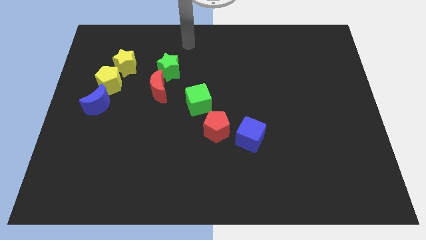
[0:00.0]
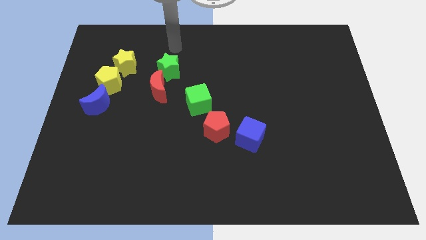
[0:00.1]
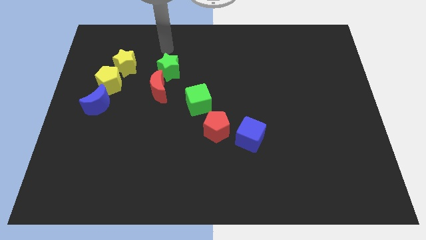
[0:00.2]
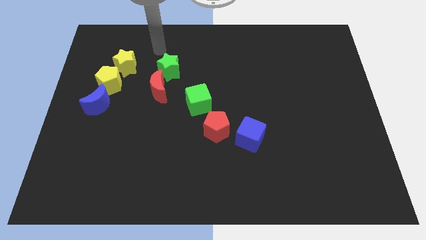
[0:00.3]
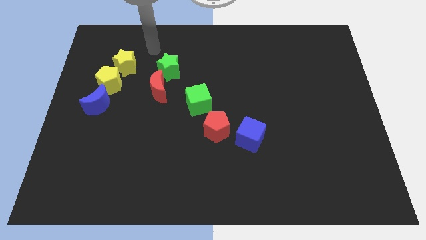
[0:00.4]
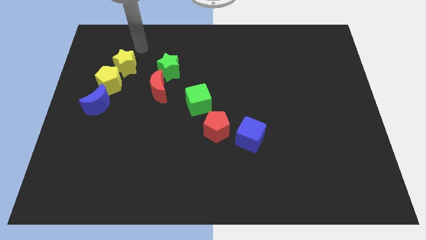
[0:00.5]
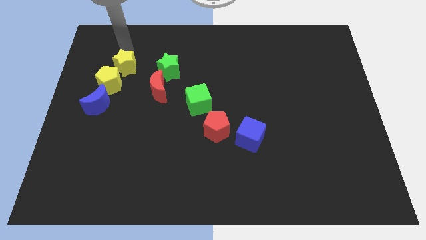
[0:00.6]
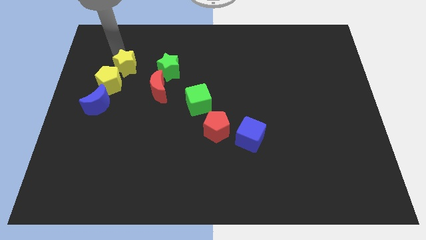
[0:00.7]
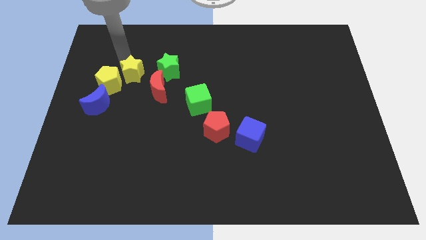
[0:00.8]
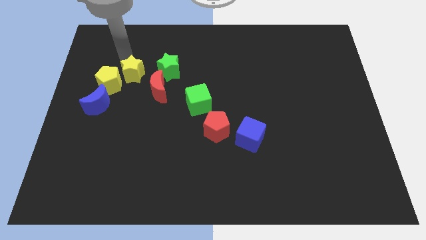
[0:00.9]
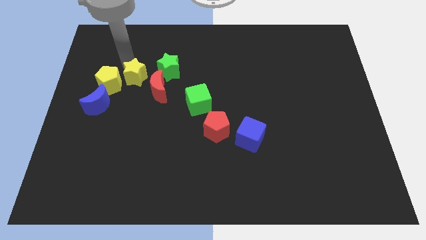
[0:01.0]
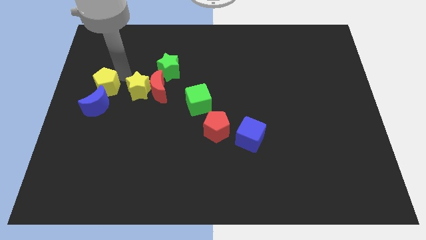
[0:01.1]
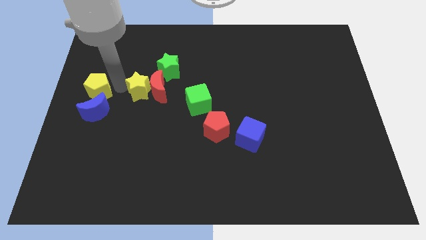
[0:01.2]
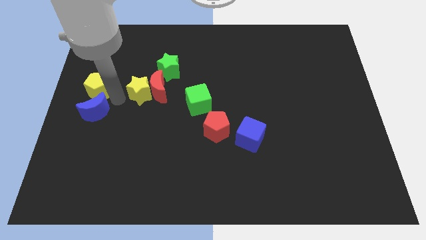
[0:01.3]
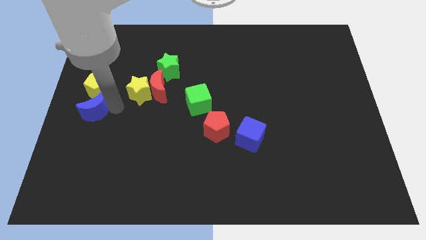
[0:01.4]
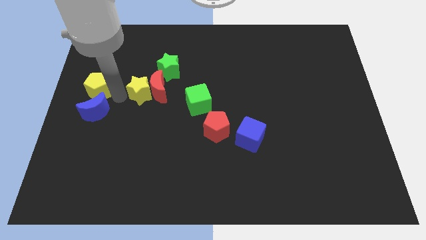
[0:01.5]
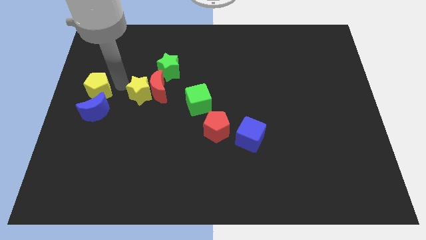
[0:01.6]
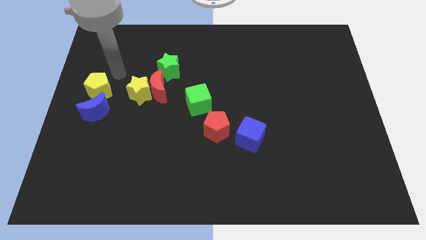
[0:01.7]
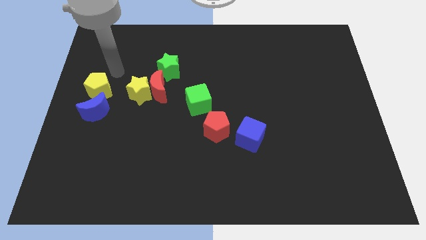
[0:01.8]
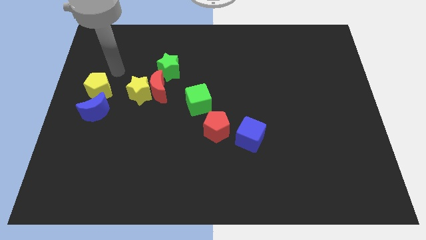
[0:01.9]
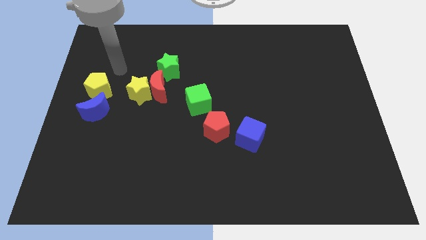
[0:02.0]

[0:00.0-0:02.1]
slightly push yellow star

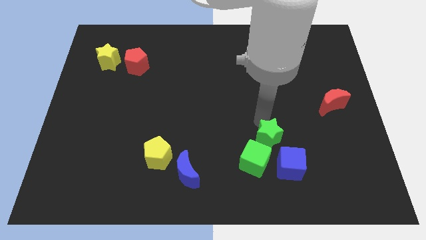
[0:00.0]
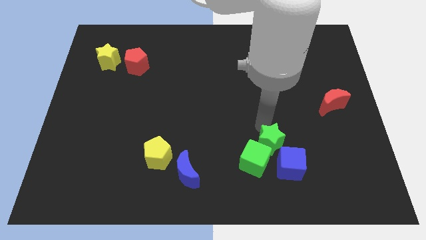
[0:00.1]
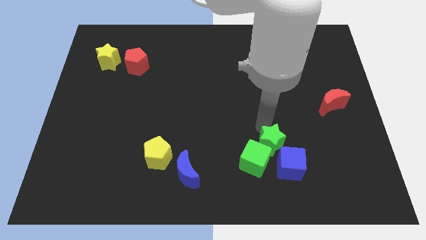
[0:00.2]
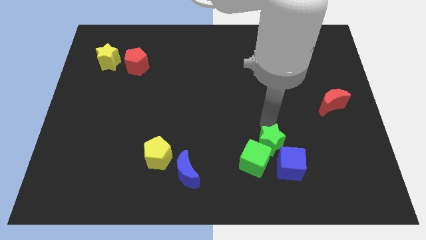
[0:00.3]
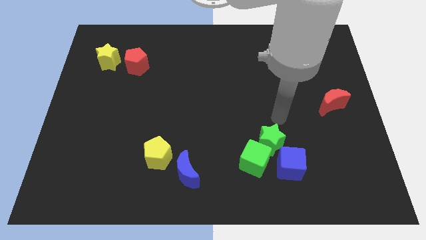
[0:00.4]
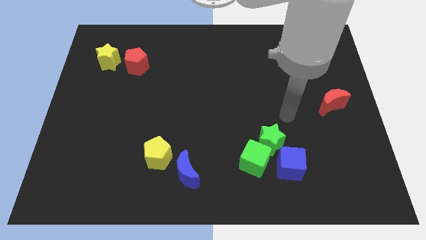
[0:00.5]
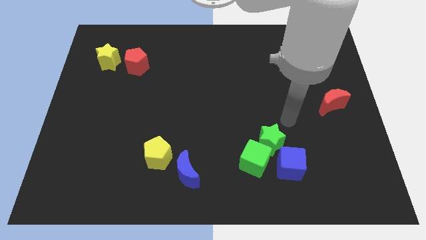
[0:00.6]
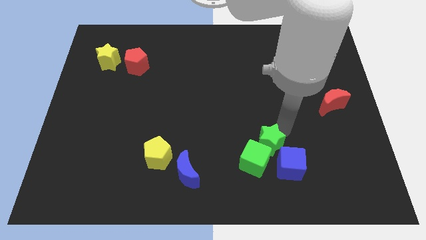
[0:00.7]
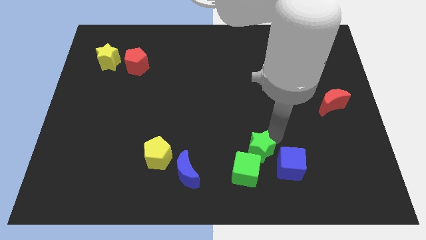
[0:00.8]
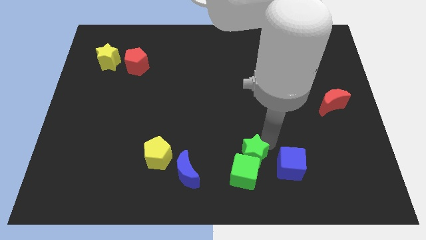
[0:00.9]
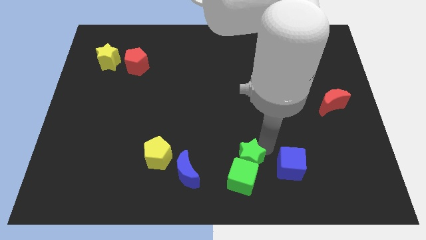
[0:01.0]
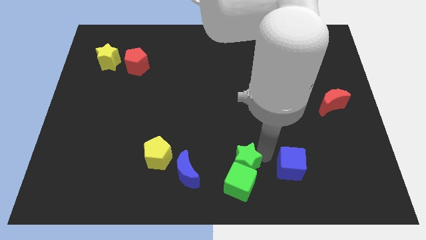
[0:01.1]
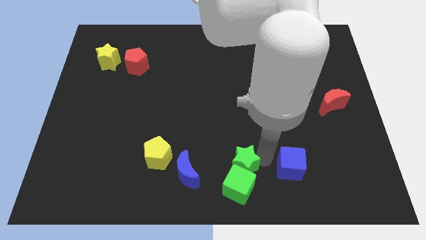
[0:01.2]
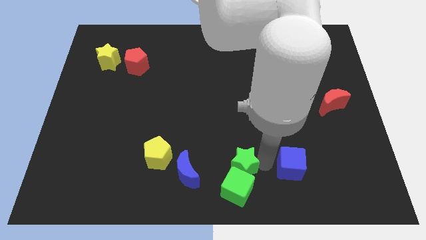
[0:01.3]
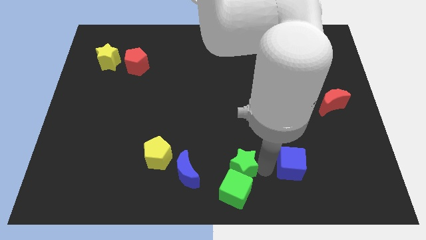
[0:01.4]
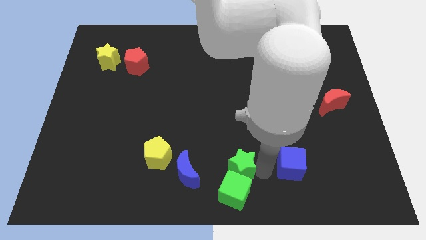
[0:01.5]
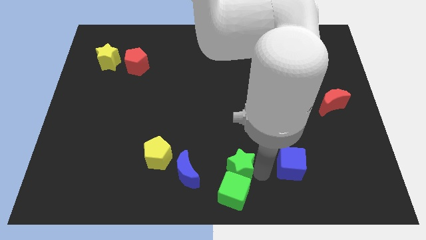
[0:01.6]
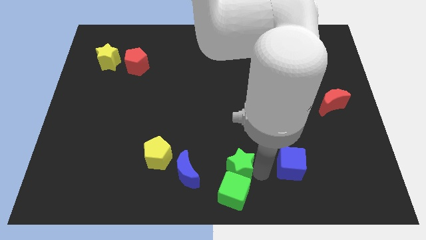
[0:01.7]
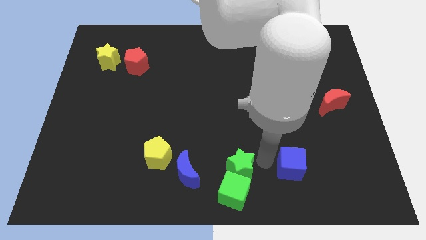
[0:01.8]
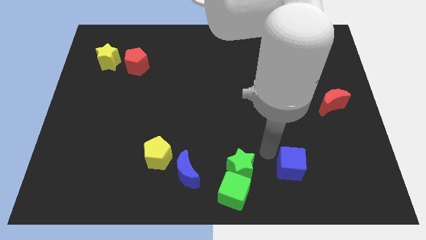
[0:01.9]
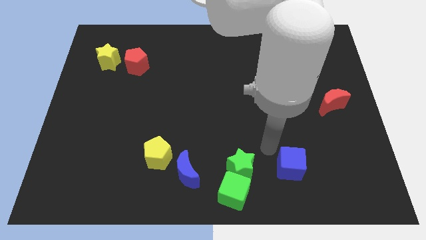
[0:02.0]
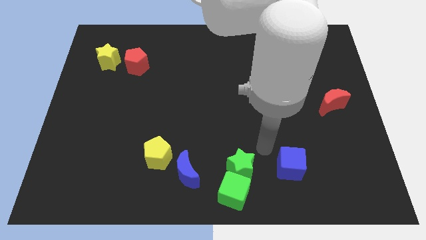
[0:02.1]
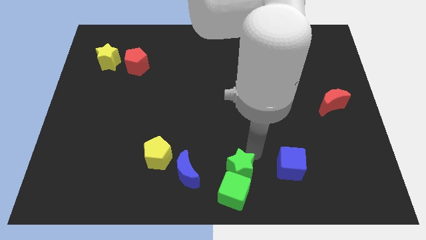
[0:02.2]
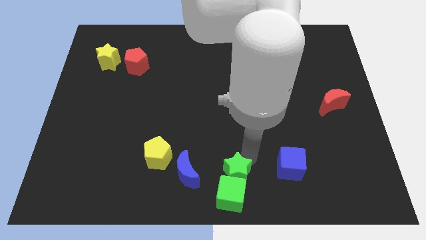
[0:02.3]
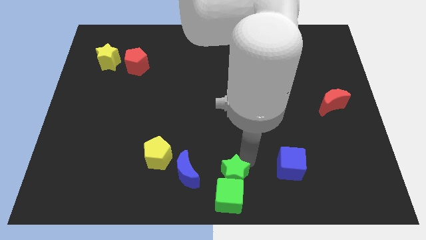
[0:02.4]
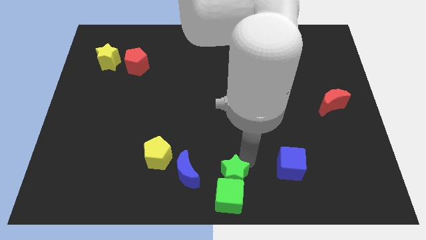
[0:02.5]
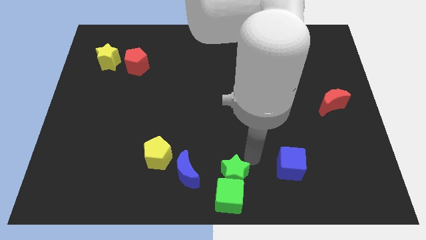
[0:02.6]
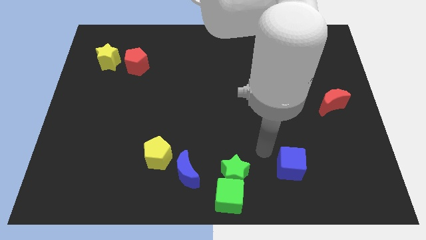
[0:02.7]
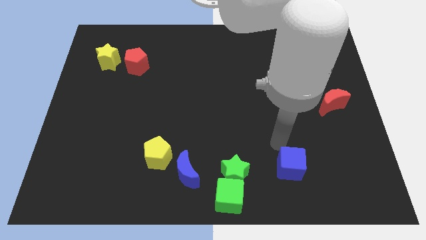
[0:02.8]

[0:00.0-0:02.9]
push the group of green blocks to the bottom center of the board

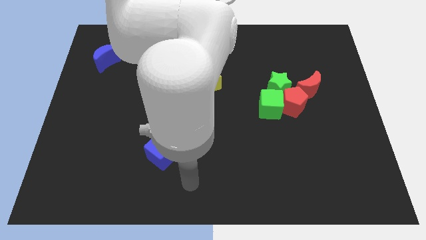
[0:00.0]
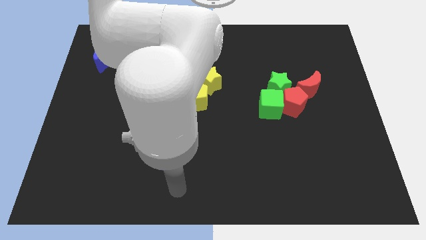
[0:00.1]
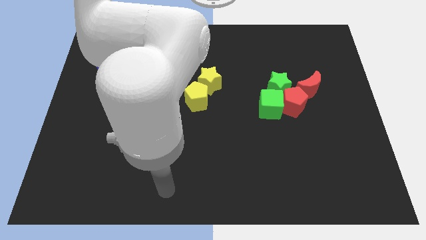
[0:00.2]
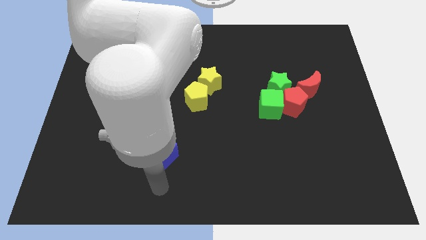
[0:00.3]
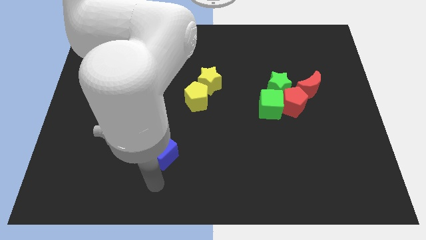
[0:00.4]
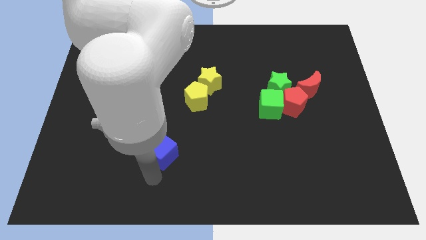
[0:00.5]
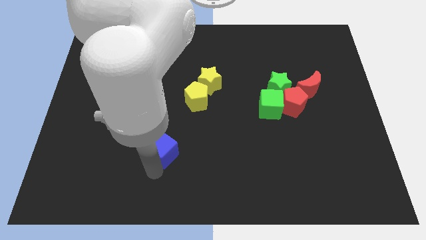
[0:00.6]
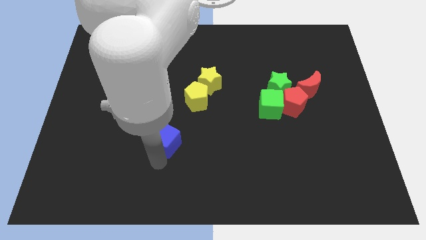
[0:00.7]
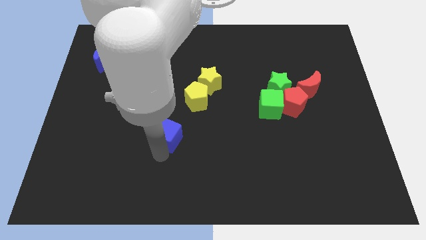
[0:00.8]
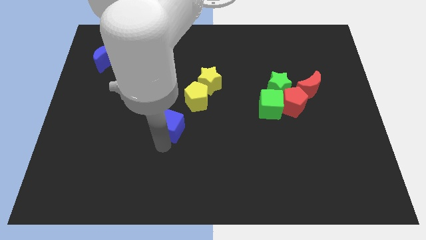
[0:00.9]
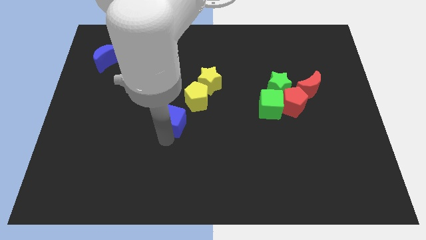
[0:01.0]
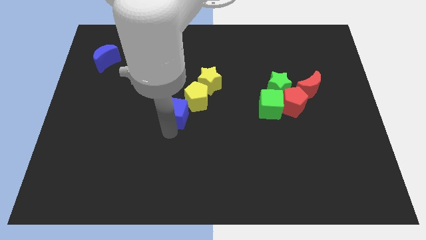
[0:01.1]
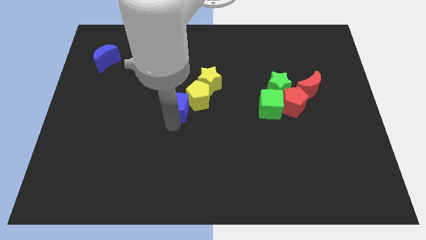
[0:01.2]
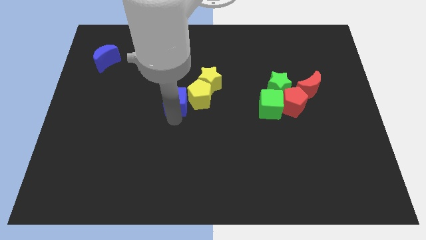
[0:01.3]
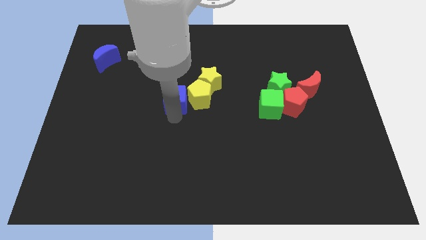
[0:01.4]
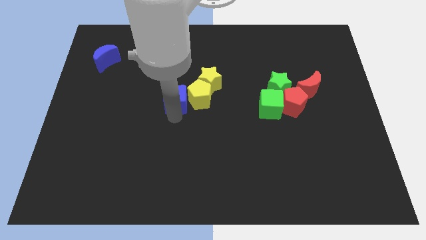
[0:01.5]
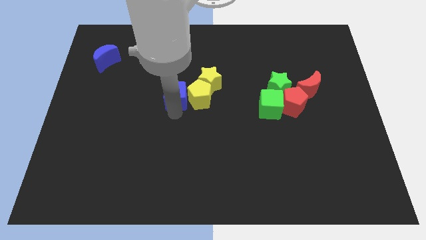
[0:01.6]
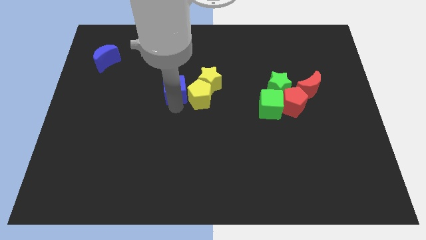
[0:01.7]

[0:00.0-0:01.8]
move the blue cube to the left of the yellow pentagon

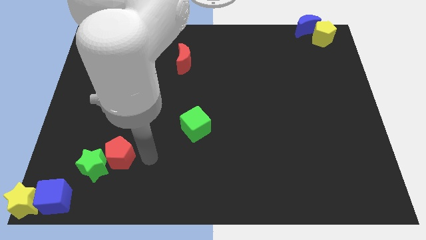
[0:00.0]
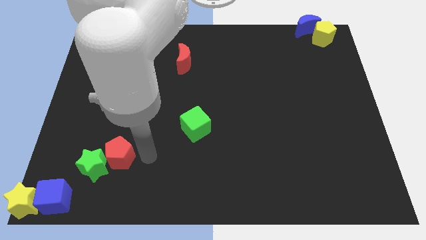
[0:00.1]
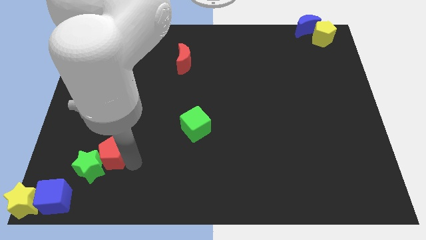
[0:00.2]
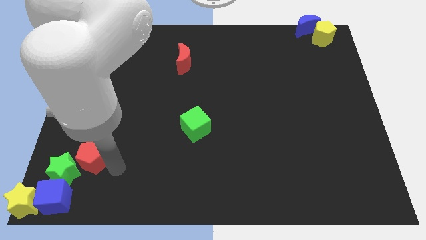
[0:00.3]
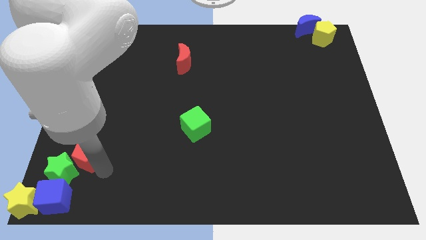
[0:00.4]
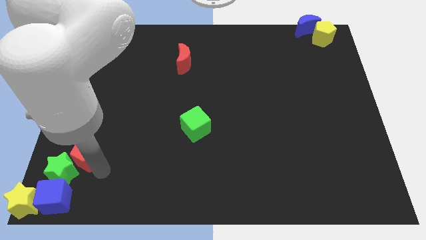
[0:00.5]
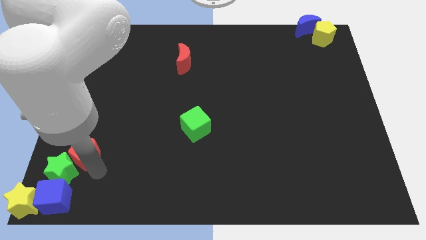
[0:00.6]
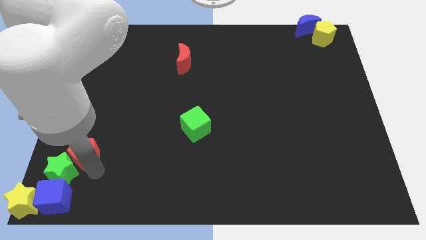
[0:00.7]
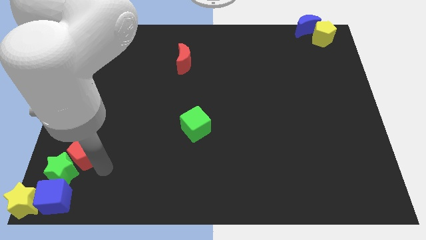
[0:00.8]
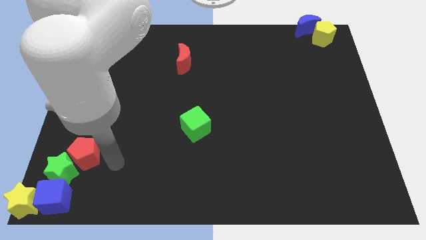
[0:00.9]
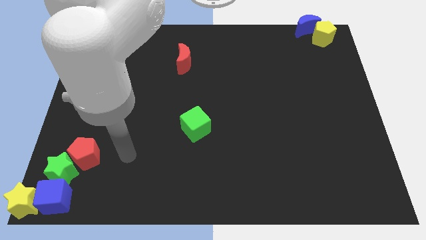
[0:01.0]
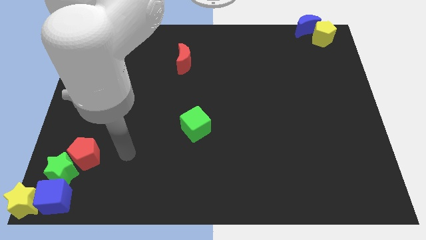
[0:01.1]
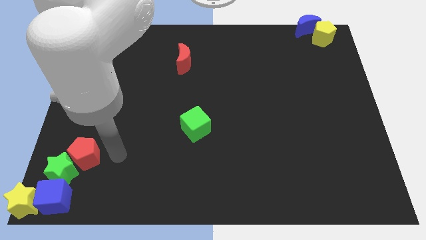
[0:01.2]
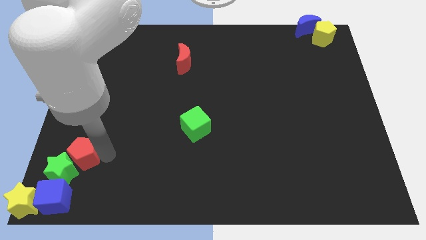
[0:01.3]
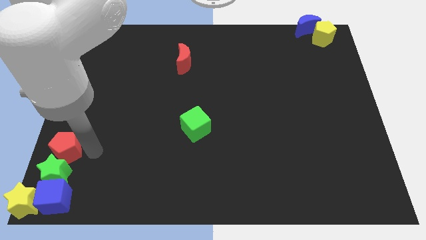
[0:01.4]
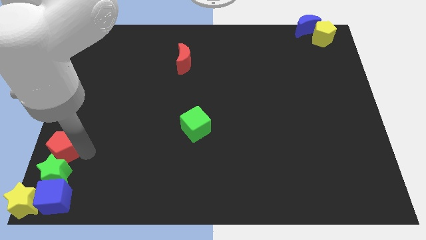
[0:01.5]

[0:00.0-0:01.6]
push the red pentagon and green star above the blue cube

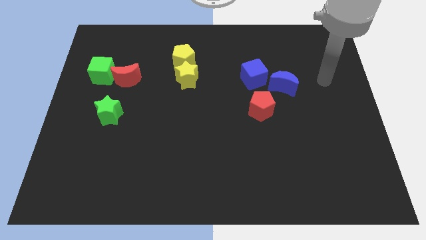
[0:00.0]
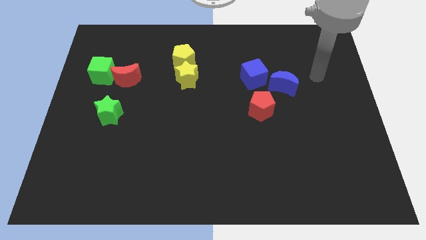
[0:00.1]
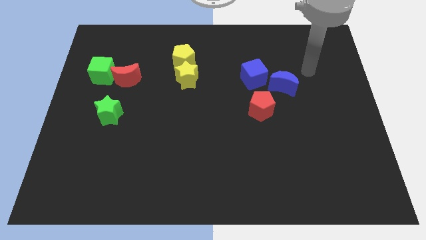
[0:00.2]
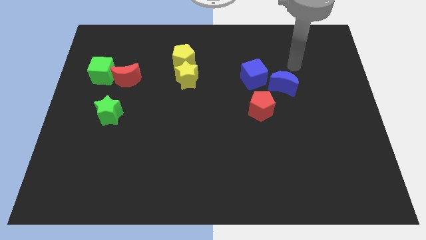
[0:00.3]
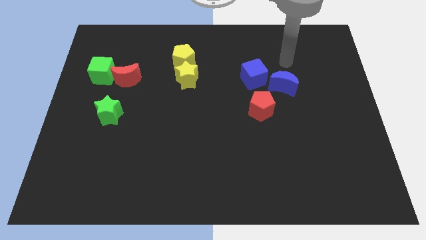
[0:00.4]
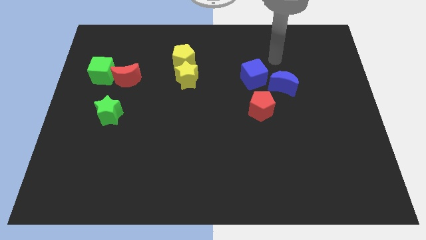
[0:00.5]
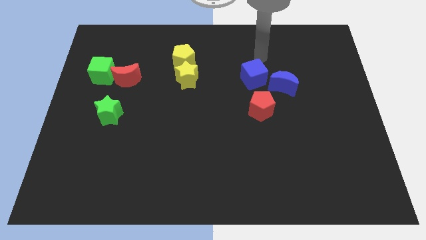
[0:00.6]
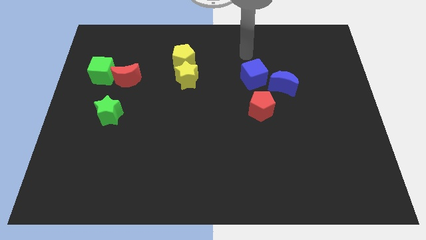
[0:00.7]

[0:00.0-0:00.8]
move arm above blue cube
